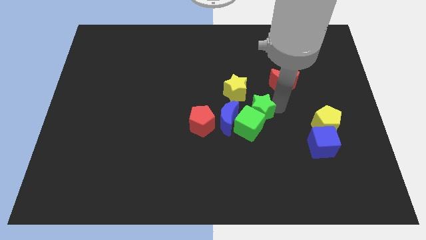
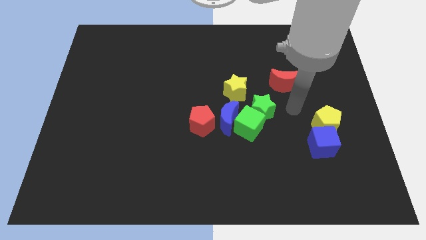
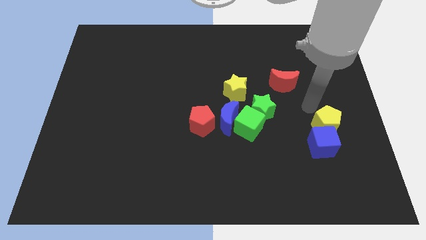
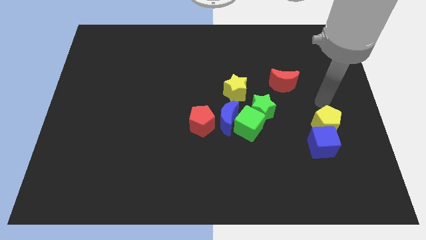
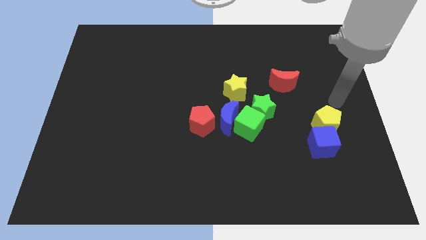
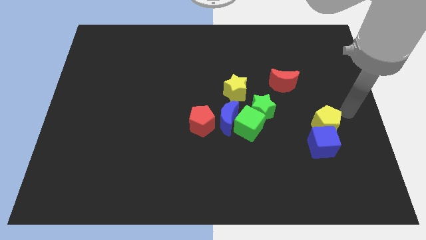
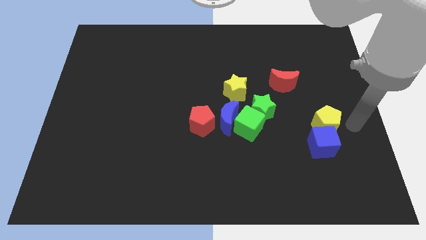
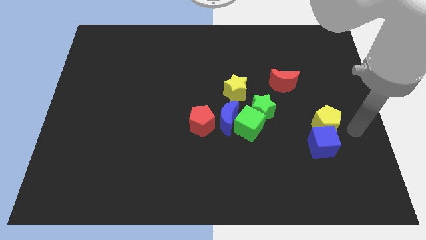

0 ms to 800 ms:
move your arm away from the green star

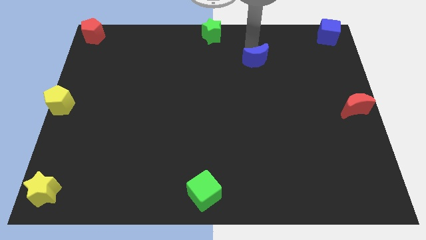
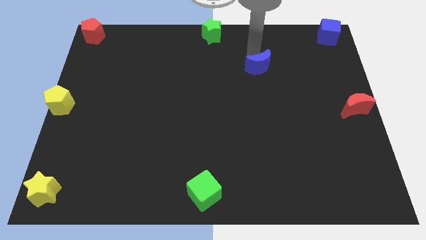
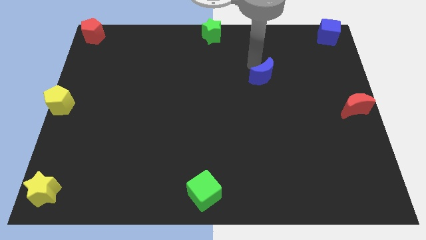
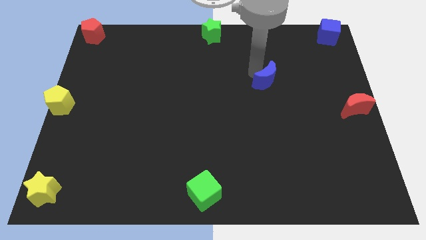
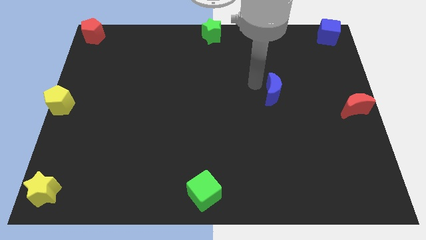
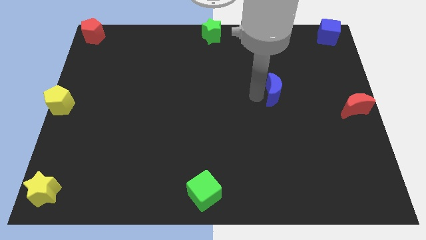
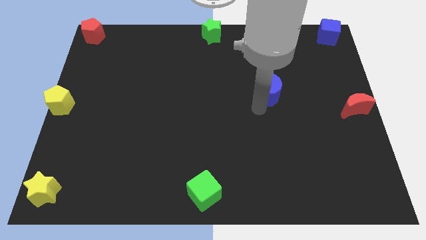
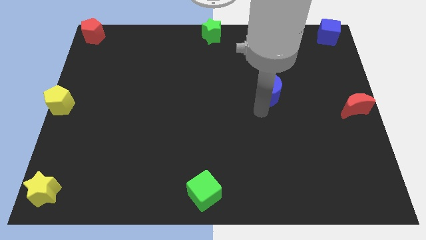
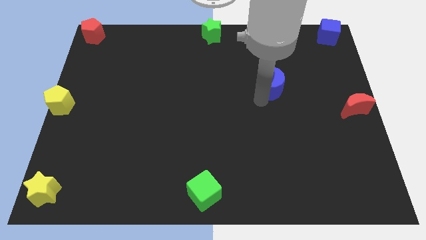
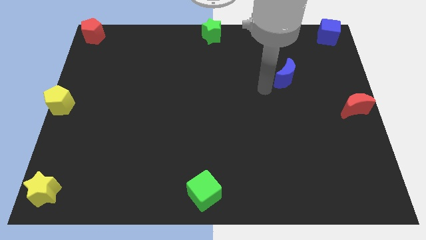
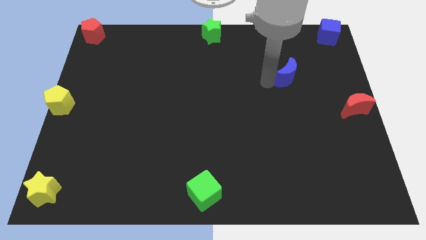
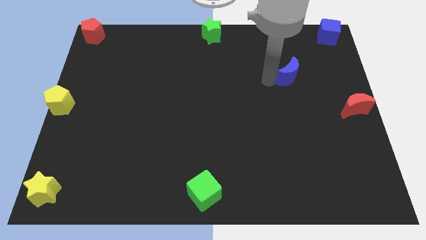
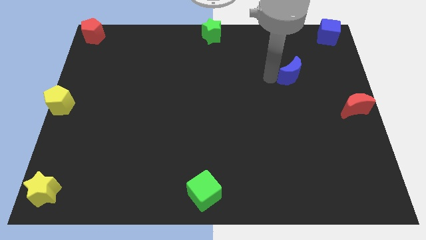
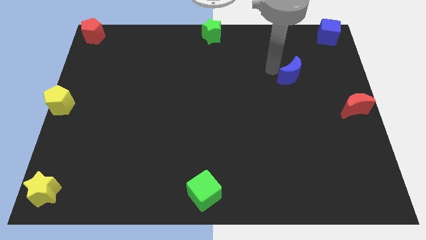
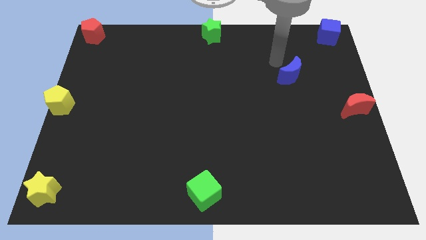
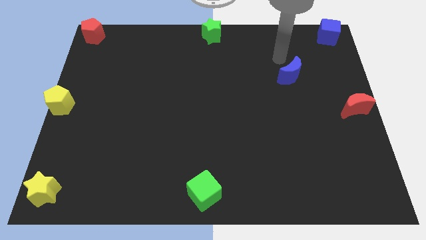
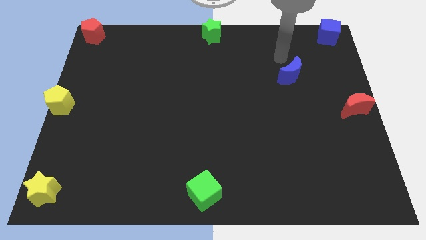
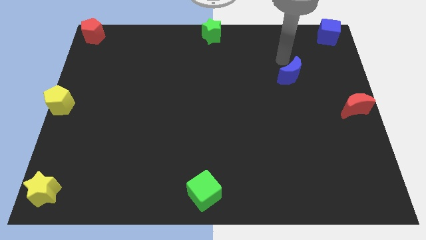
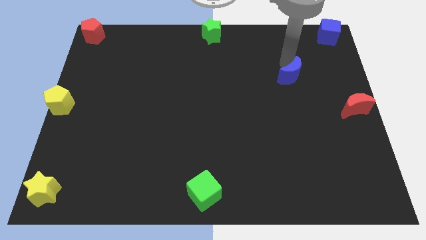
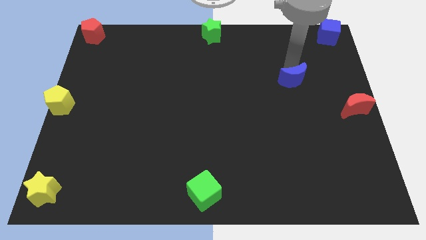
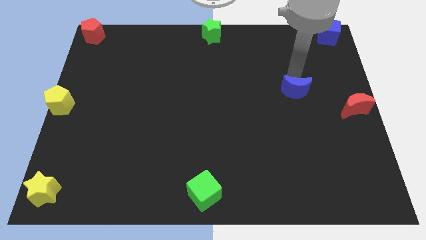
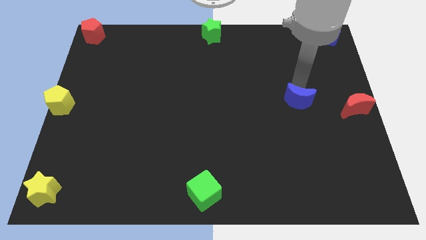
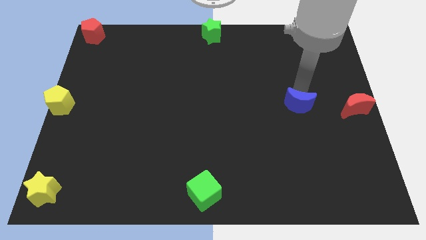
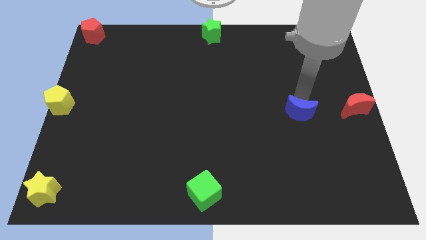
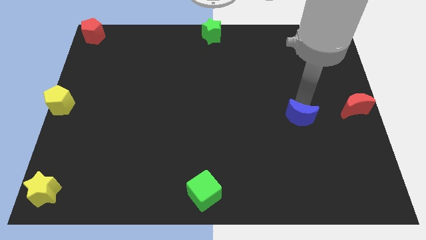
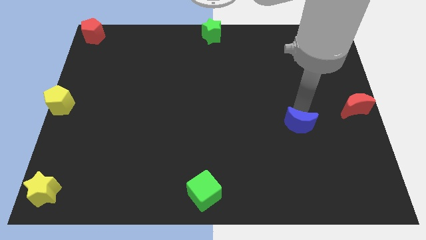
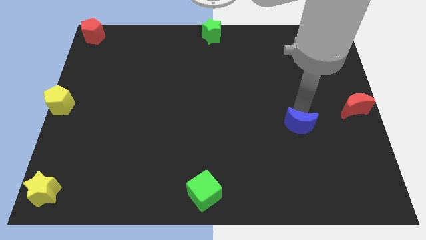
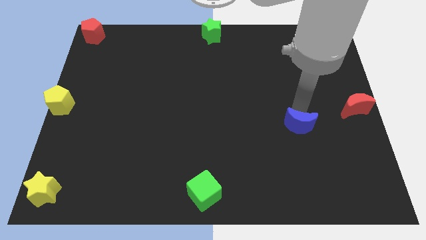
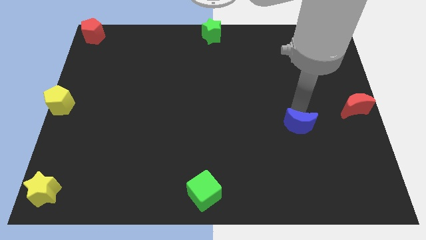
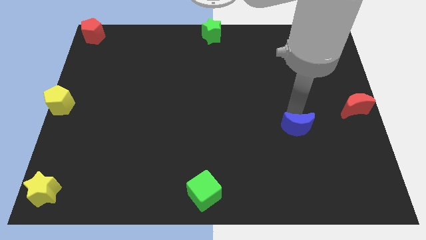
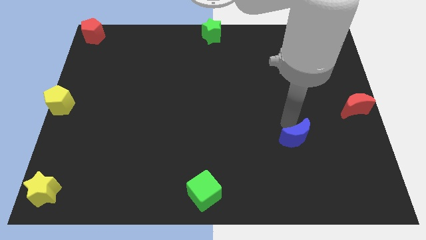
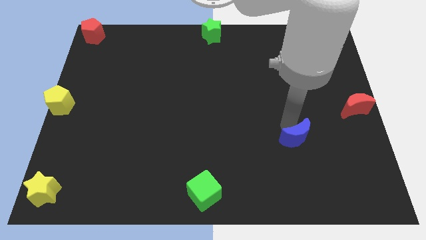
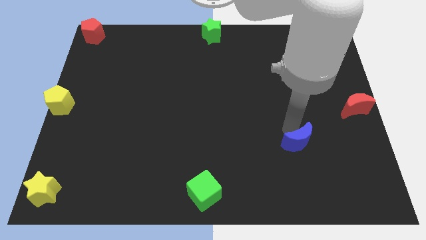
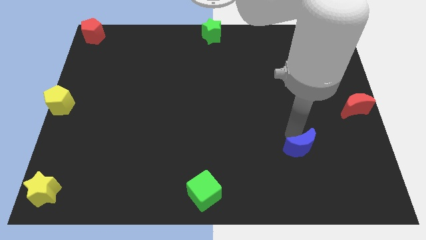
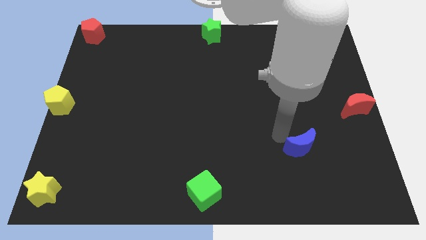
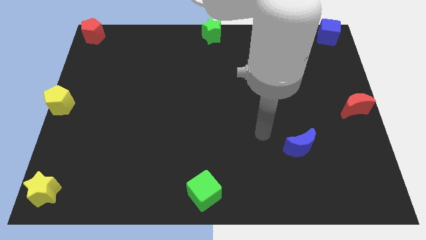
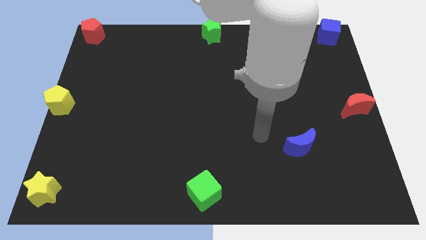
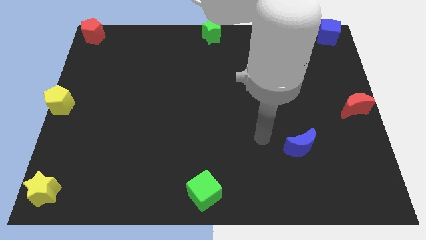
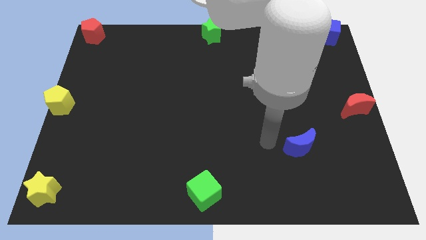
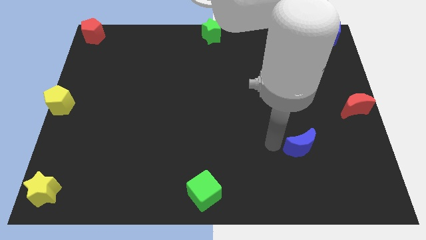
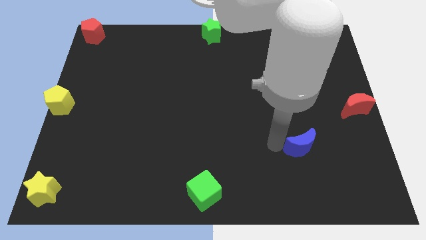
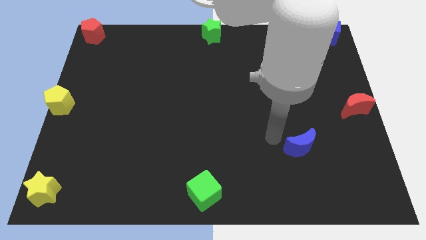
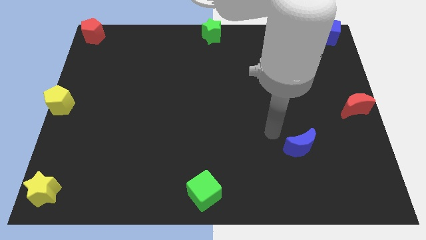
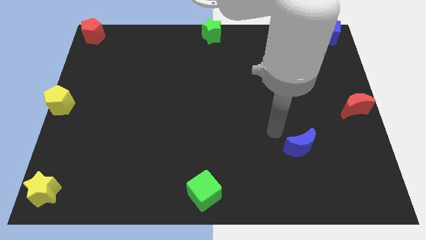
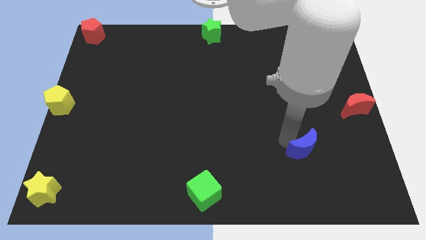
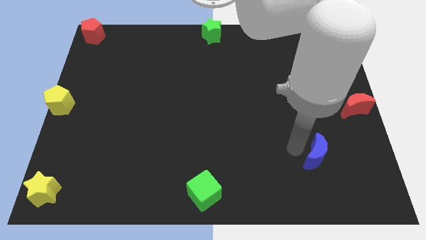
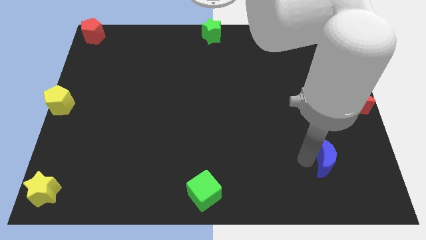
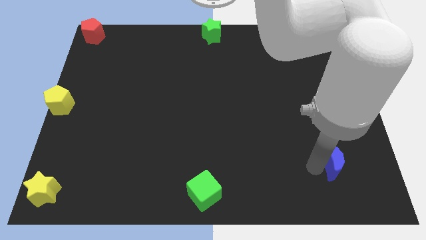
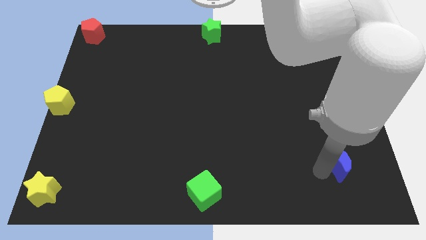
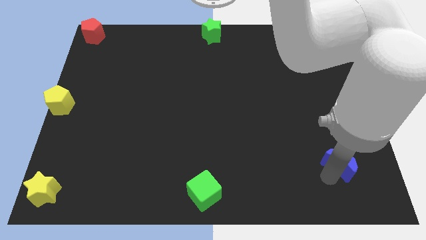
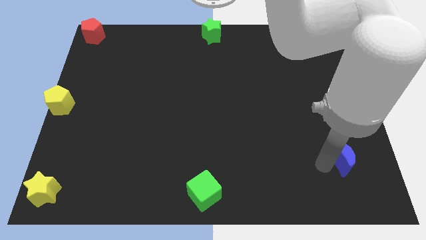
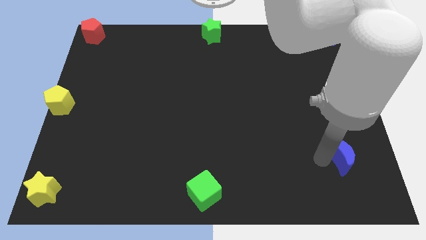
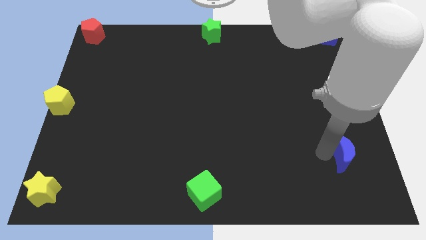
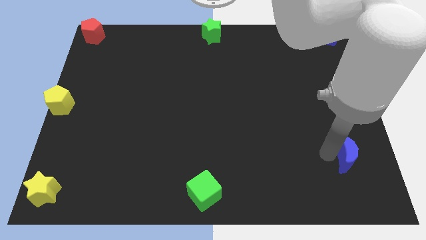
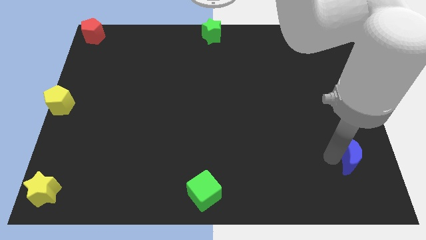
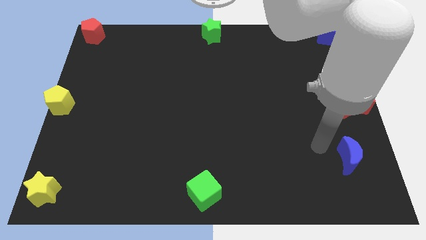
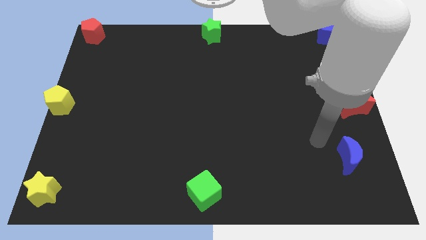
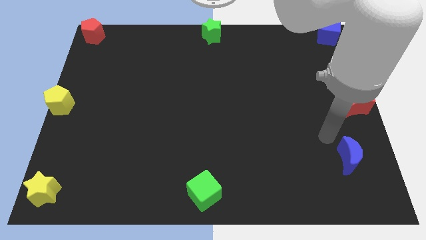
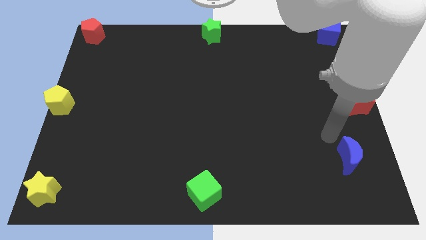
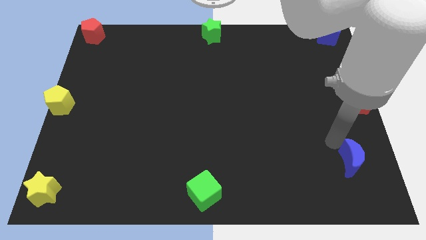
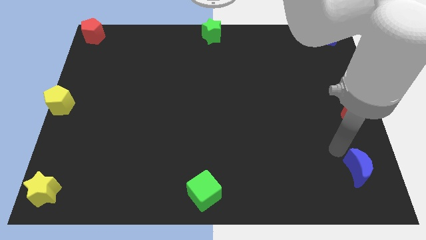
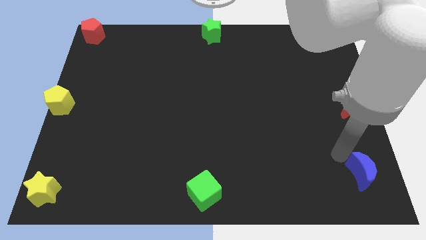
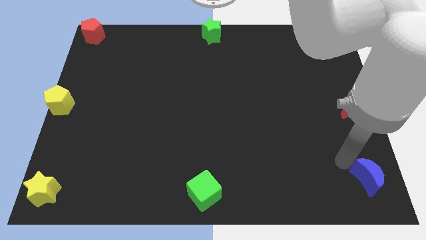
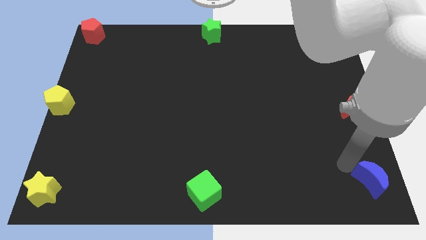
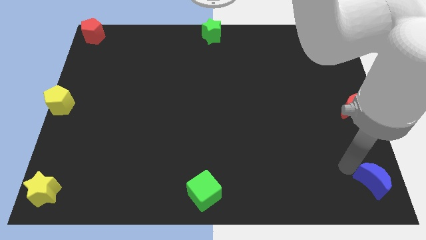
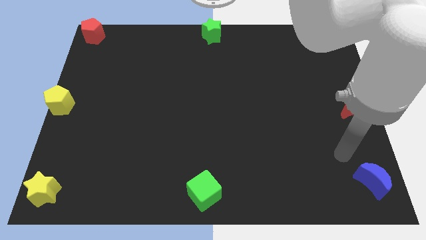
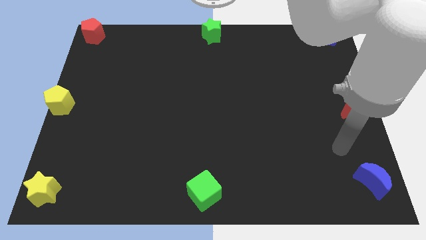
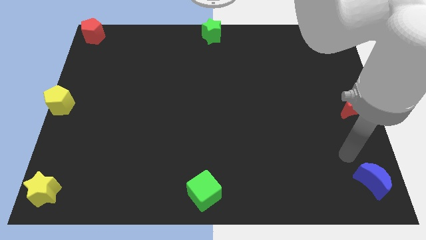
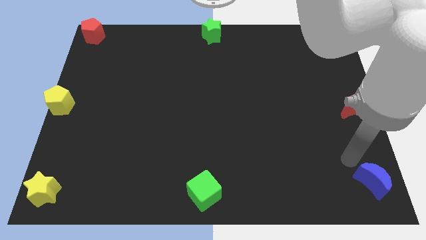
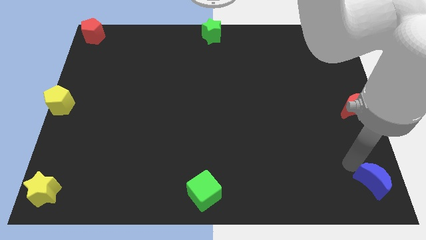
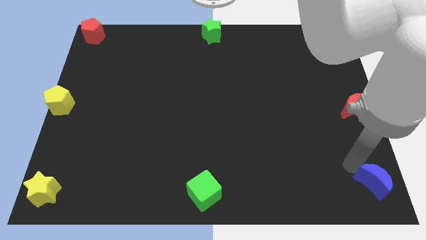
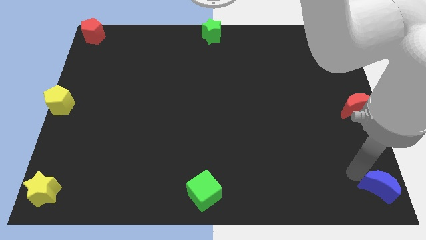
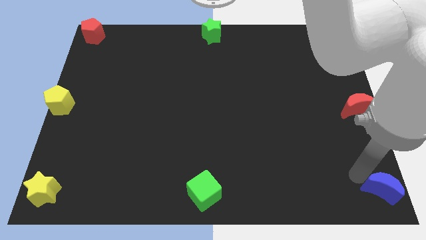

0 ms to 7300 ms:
move the blue crescent to the bottom right of the board

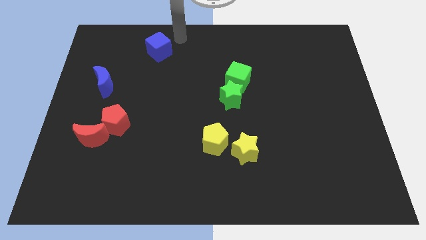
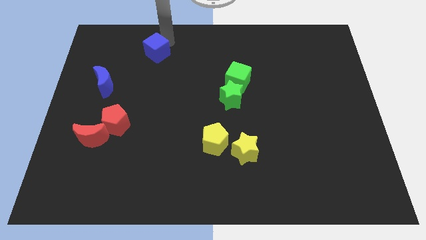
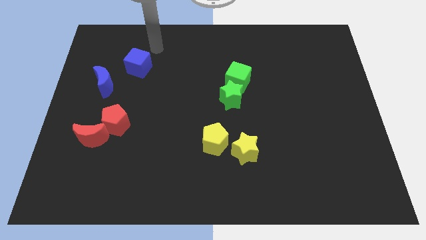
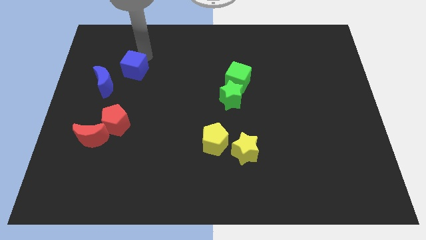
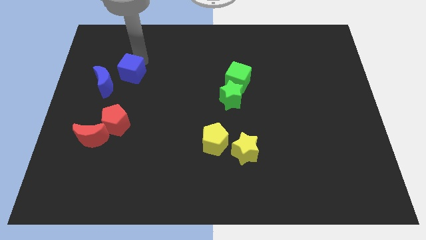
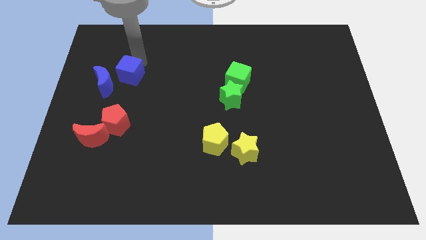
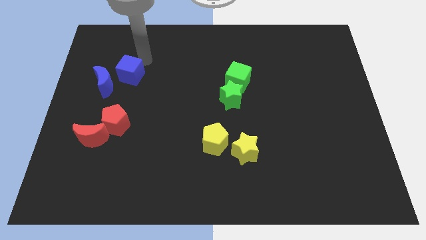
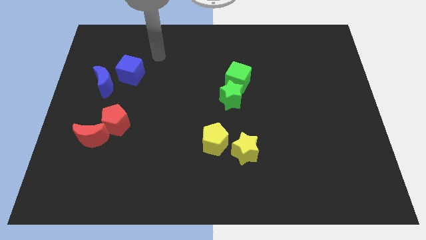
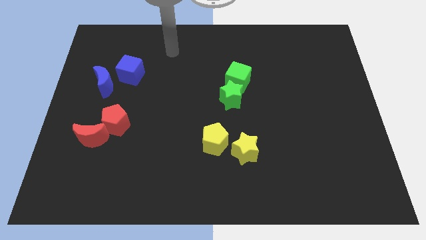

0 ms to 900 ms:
push the blue cube towards the right of the blue crescent
